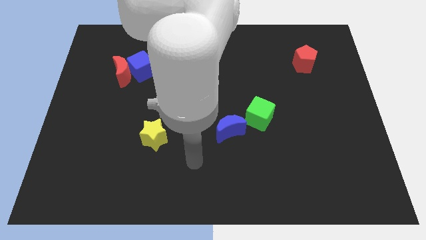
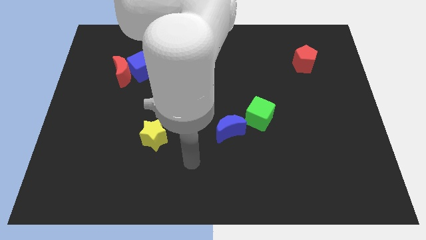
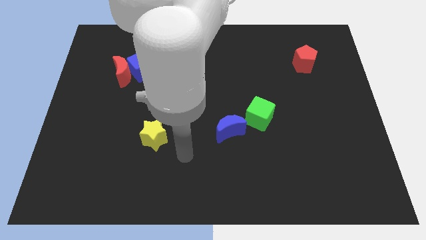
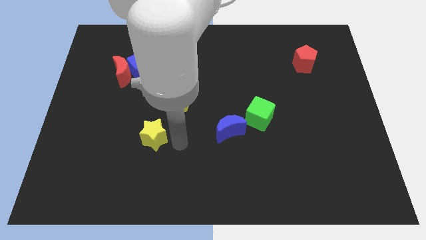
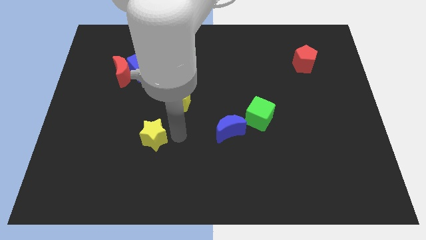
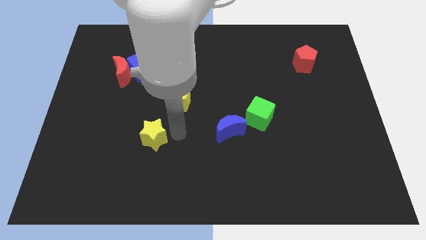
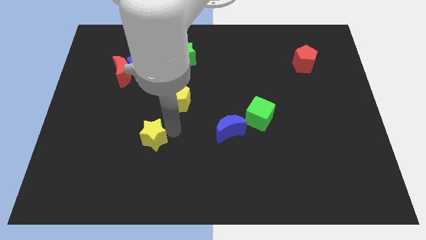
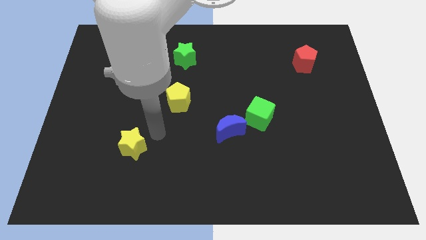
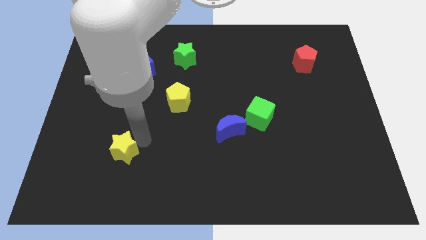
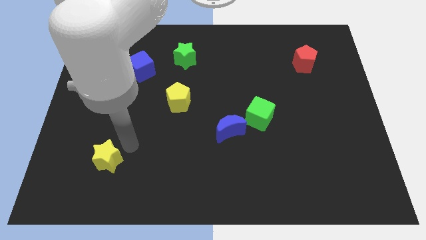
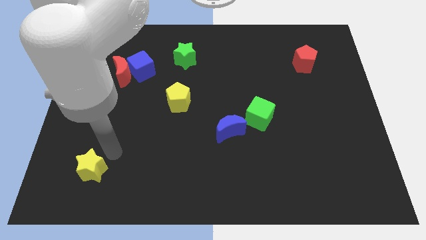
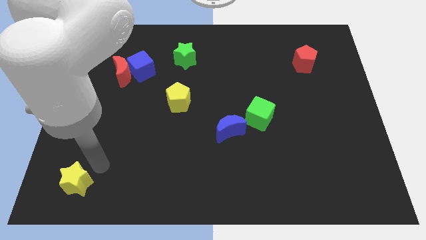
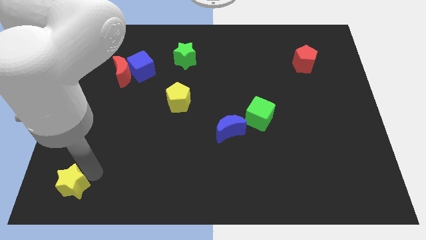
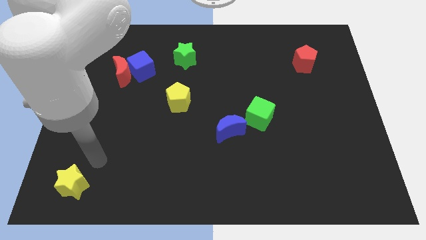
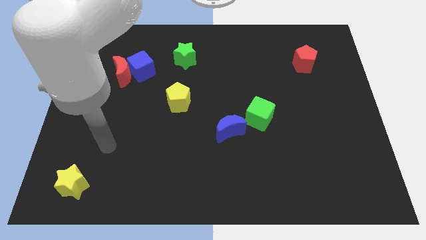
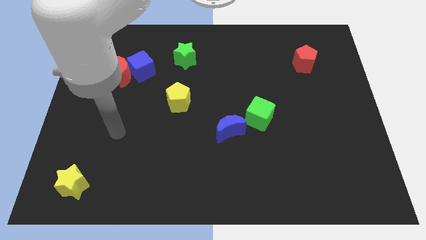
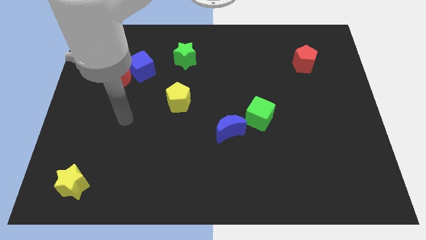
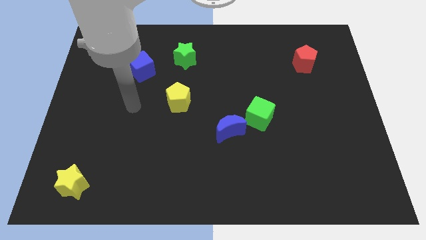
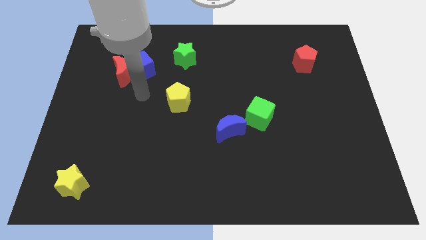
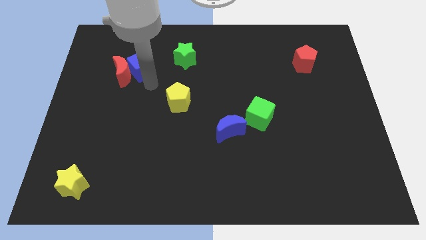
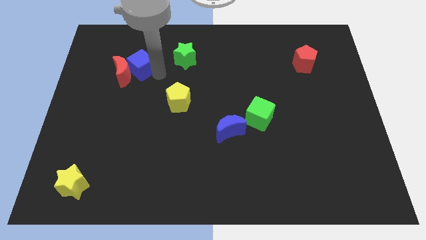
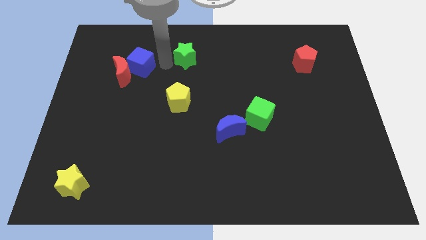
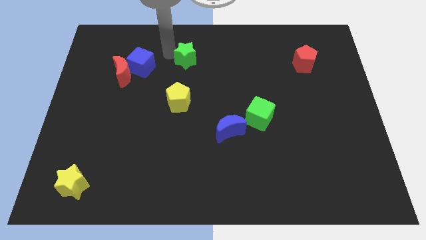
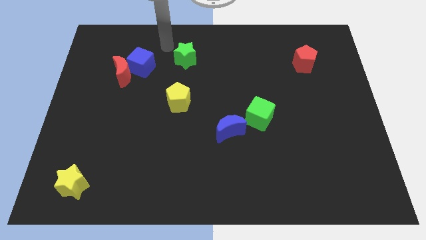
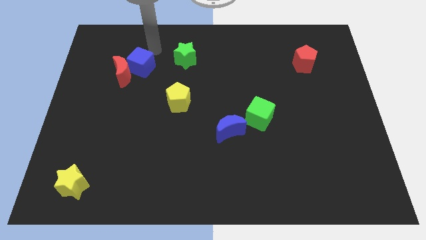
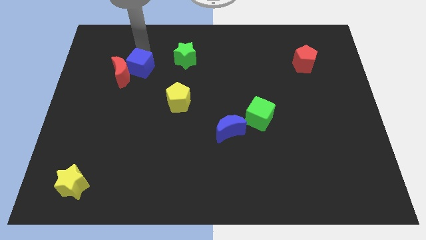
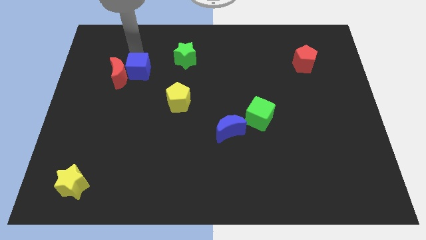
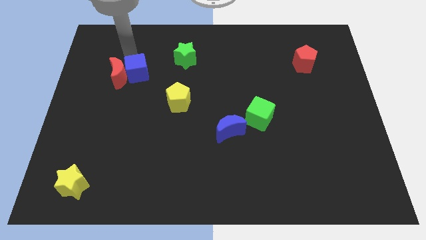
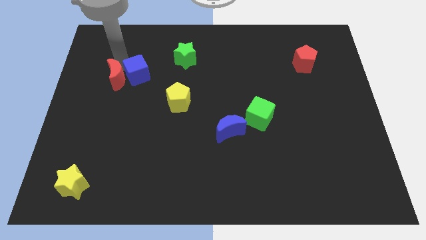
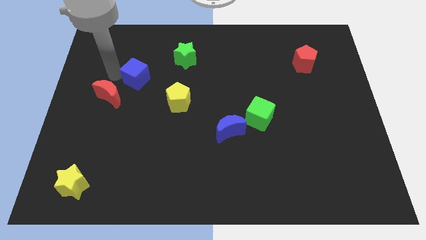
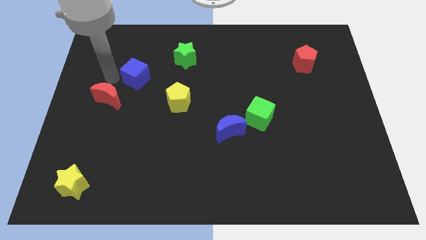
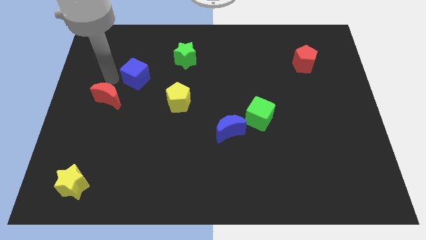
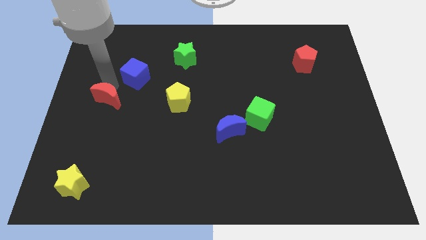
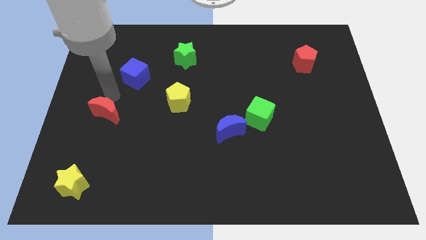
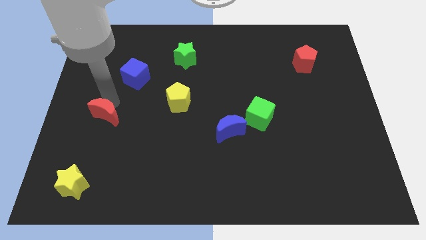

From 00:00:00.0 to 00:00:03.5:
place the yellow star and red crescent at the bottom left corner of the board

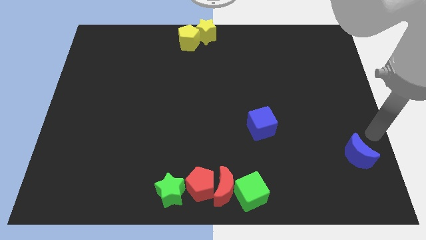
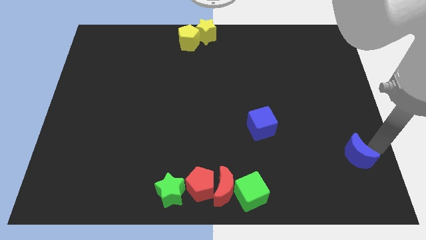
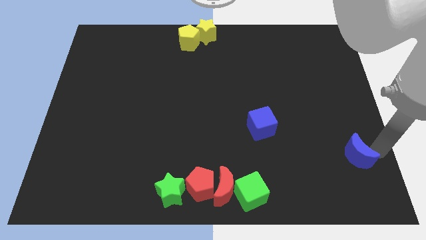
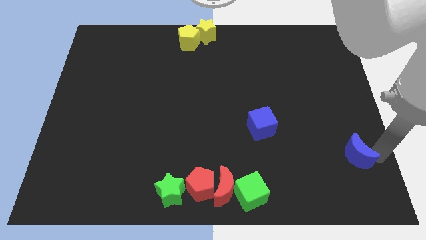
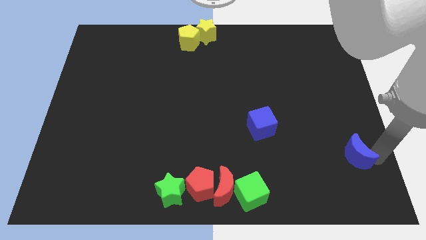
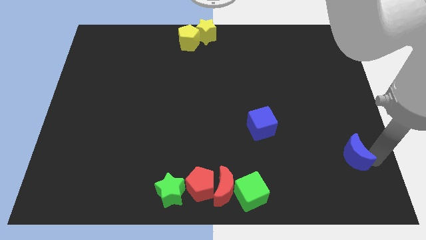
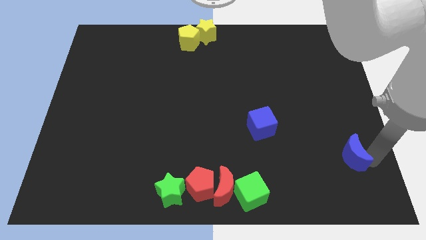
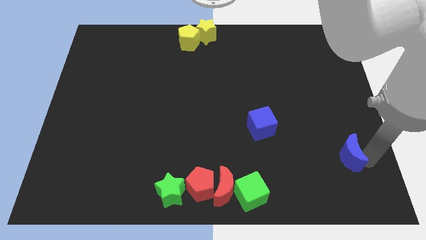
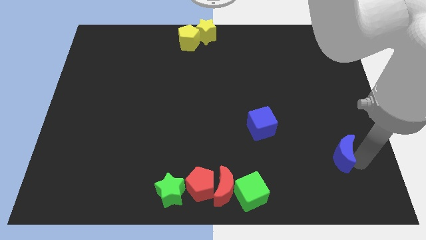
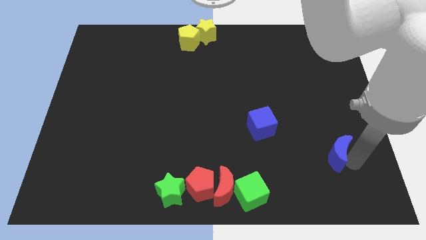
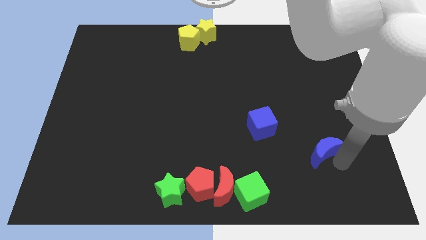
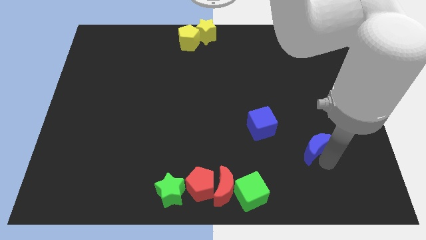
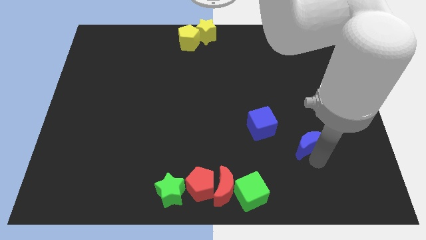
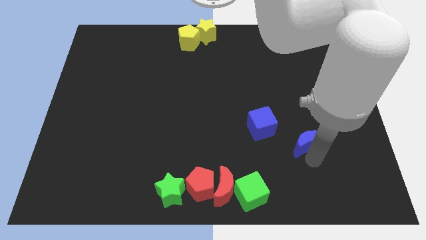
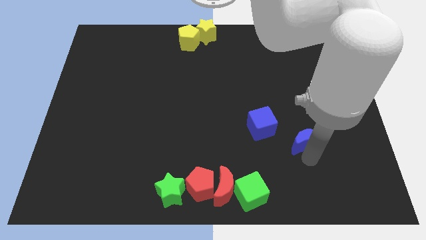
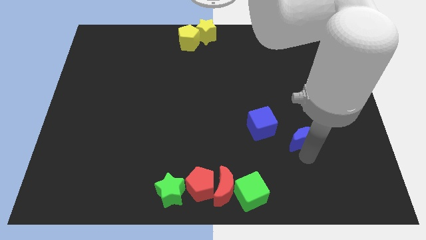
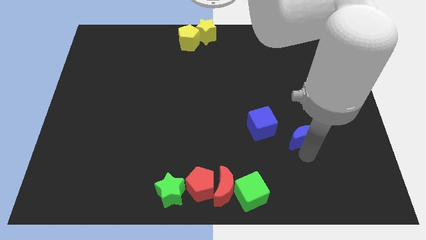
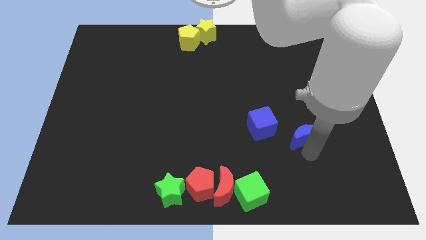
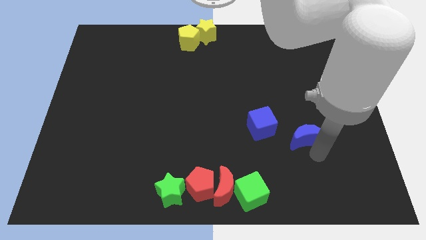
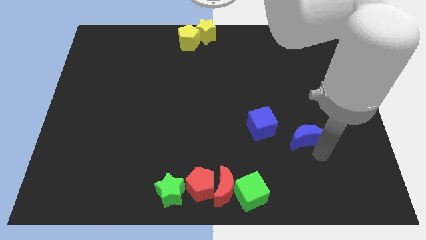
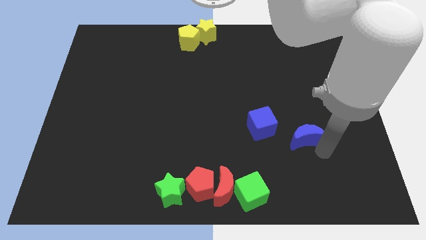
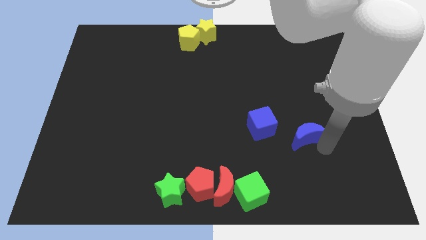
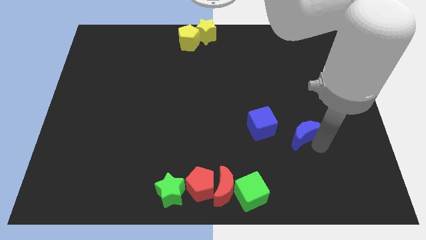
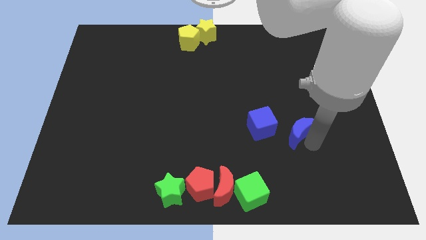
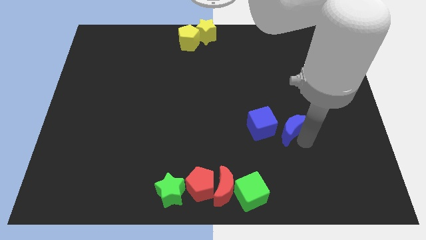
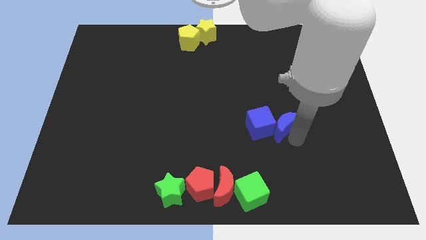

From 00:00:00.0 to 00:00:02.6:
push the blue crescent beside blue cube

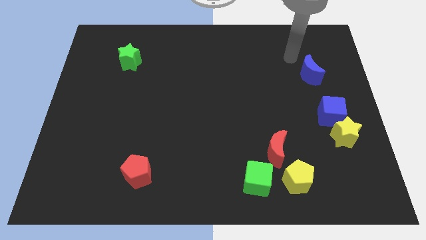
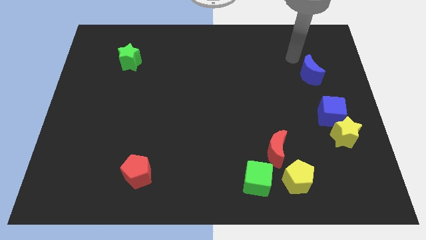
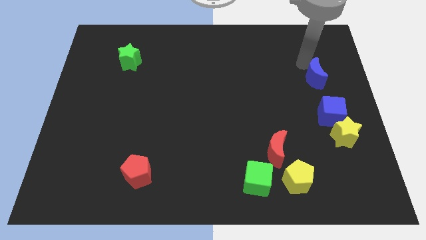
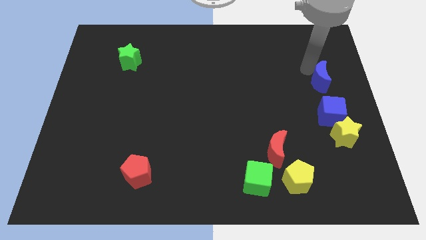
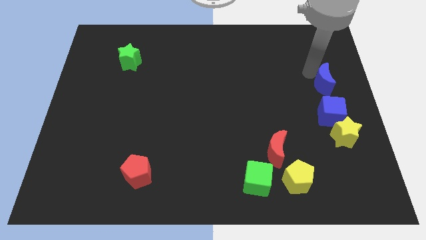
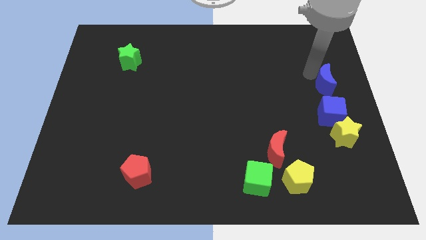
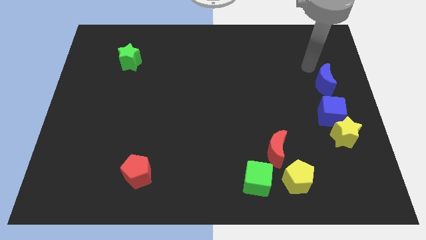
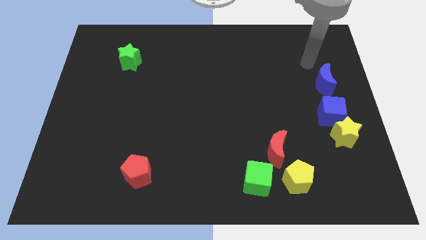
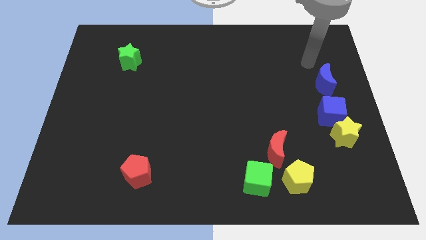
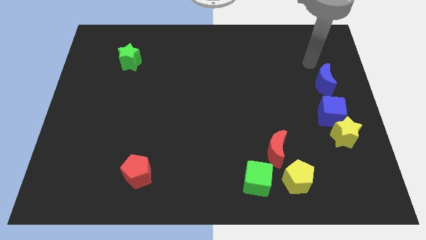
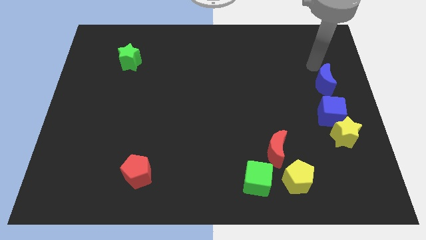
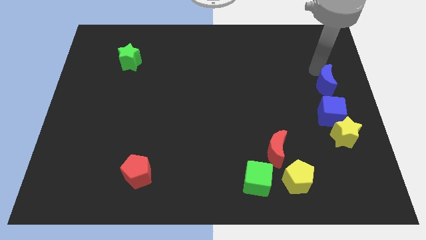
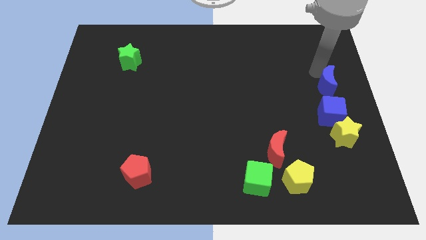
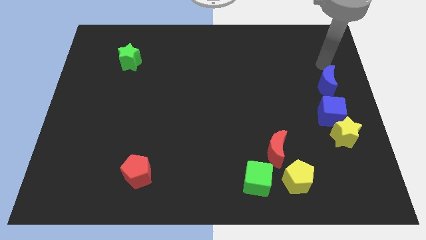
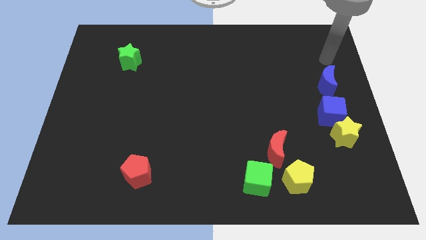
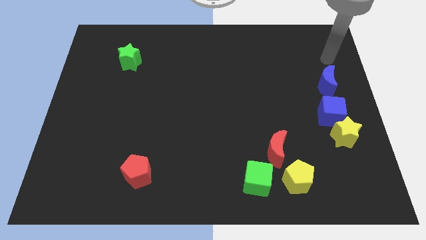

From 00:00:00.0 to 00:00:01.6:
place the blue crescent above the blue cube

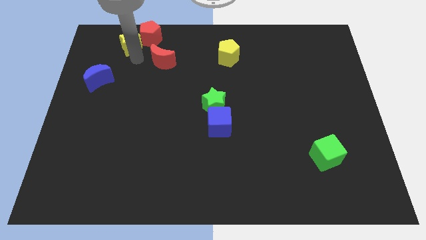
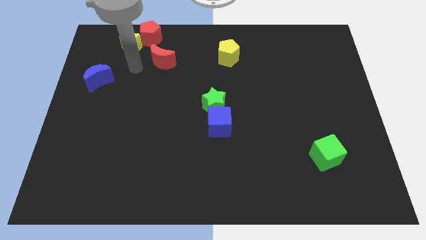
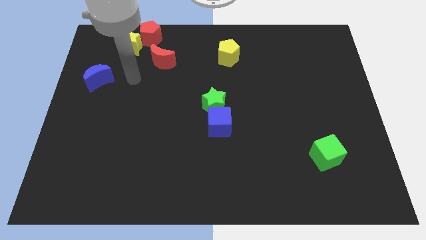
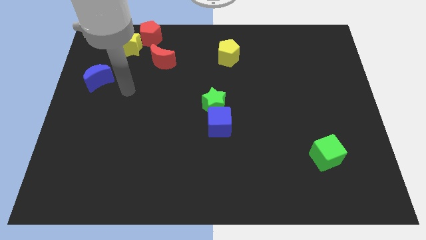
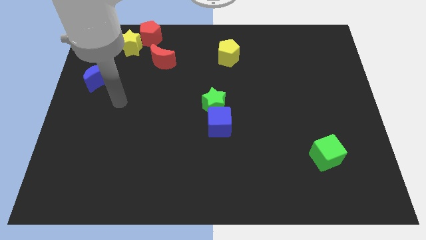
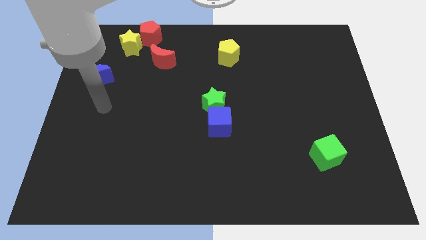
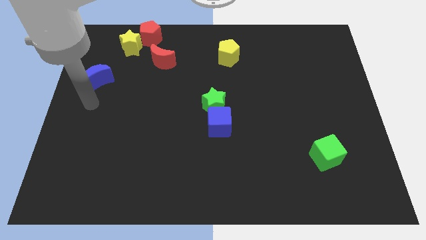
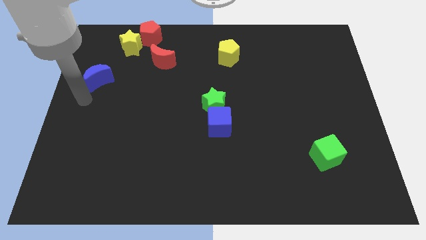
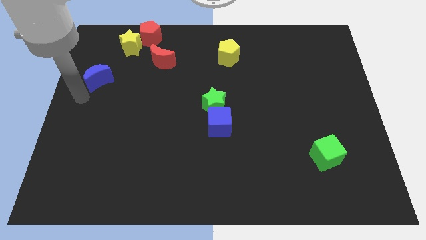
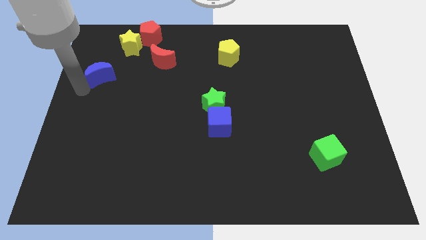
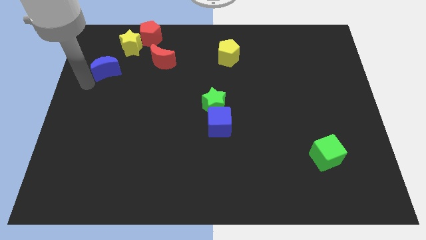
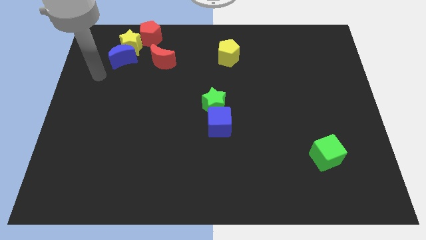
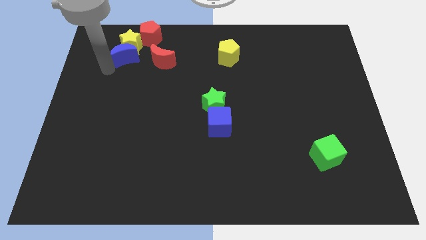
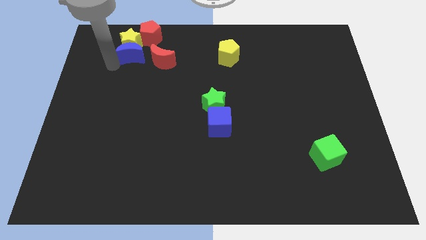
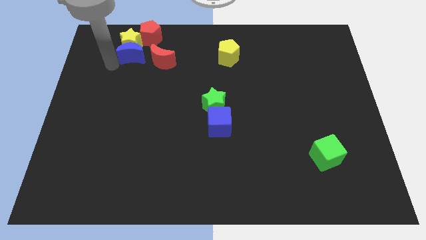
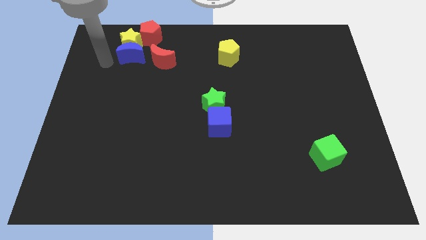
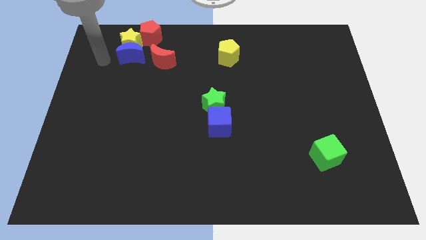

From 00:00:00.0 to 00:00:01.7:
move the blue moon into the yellow star
